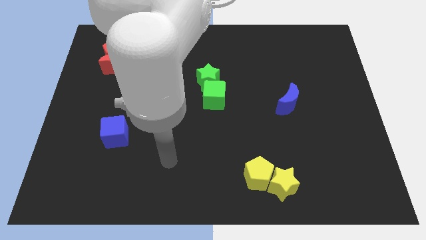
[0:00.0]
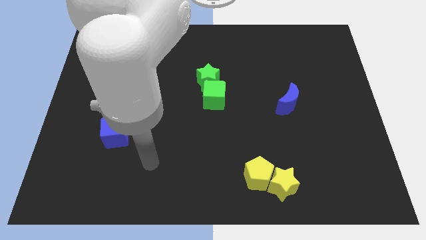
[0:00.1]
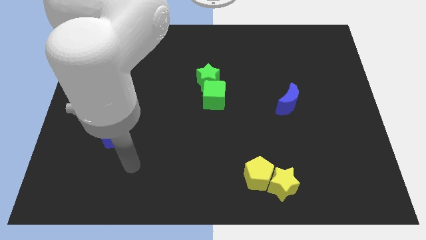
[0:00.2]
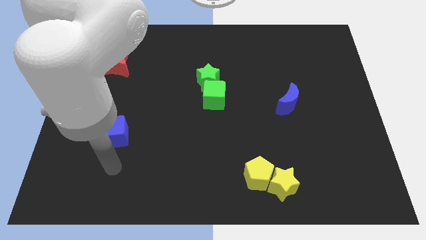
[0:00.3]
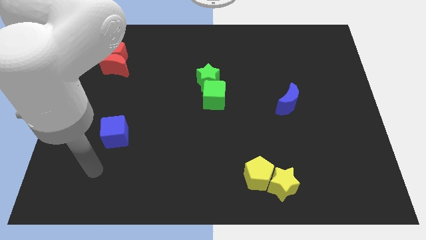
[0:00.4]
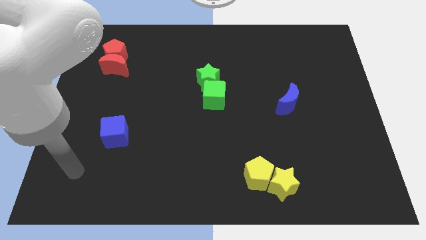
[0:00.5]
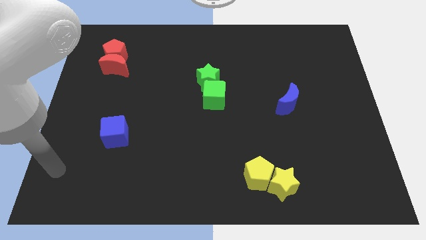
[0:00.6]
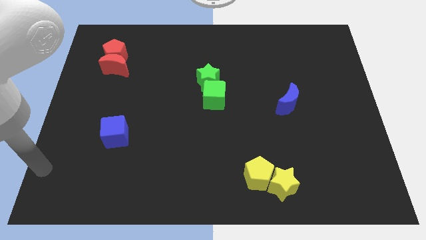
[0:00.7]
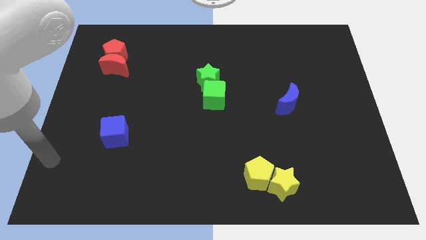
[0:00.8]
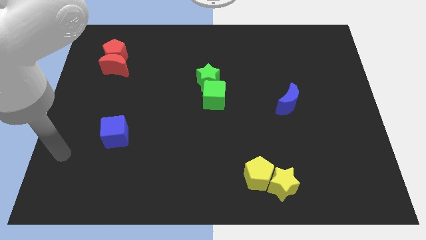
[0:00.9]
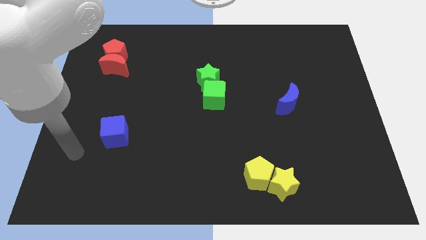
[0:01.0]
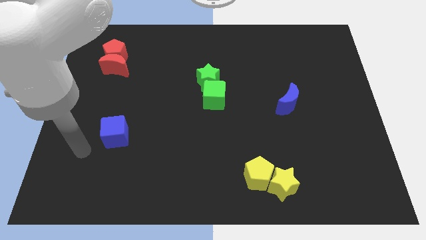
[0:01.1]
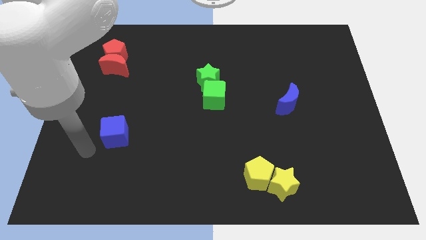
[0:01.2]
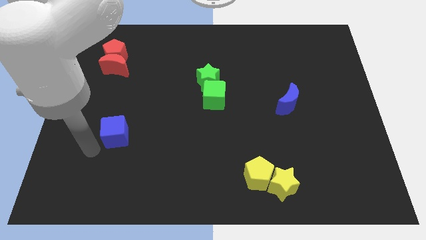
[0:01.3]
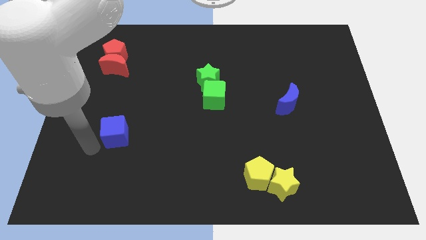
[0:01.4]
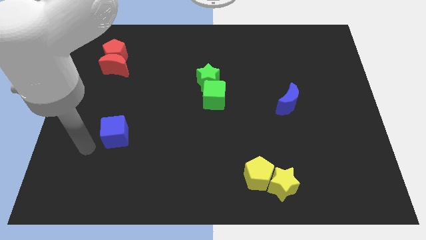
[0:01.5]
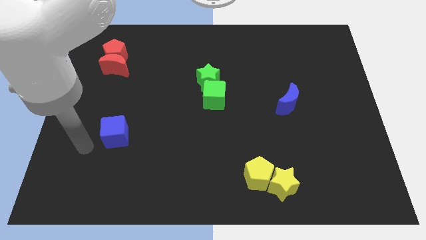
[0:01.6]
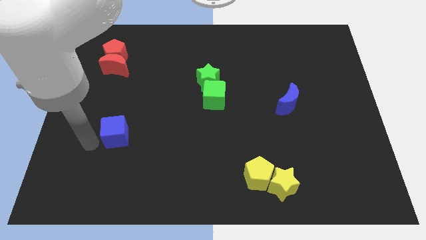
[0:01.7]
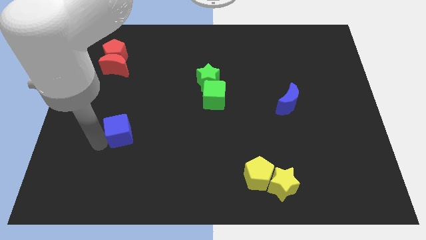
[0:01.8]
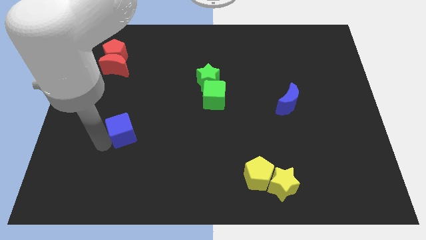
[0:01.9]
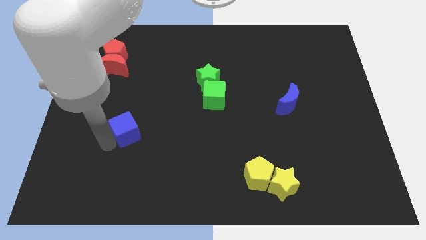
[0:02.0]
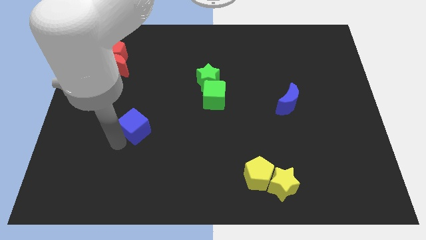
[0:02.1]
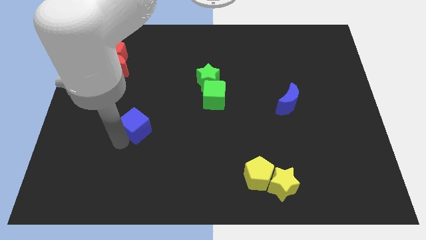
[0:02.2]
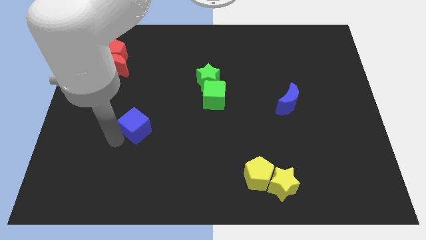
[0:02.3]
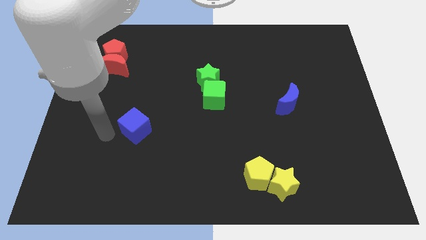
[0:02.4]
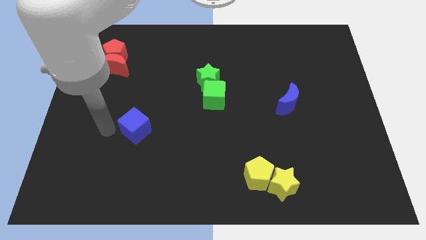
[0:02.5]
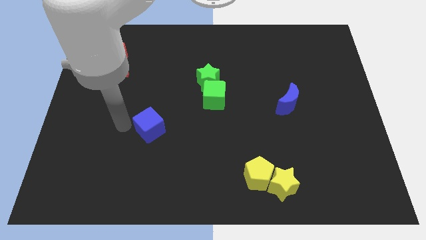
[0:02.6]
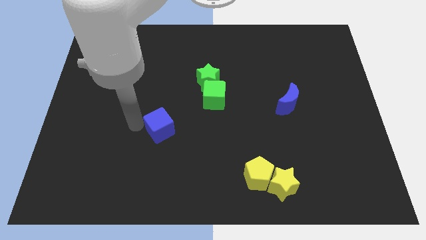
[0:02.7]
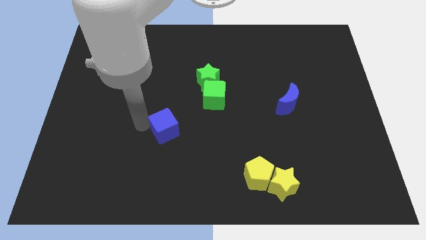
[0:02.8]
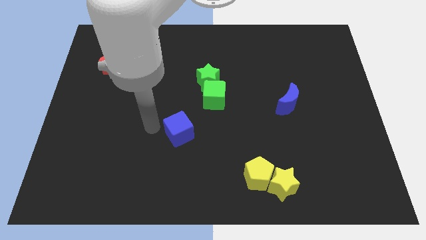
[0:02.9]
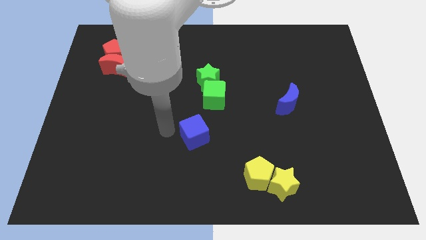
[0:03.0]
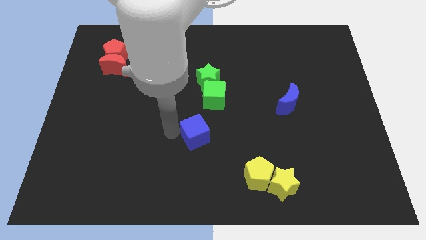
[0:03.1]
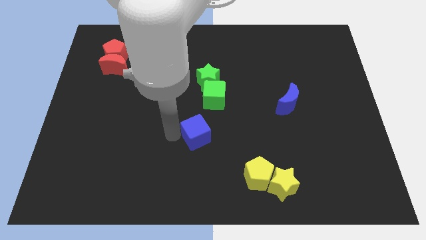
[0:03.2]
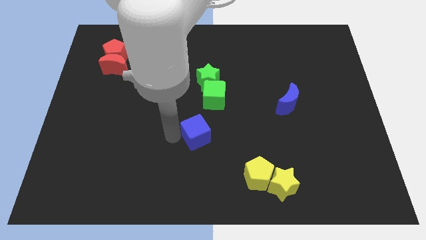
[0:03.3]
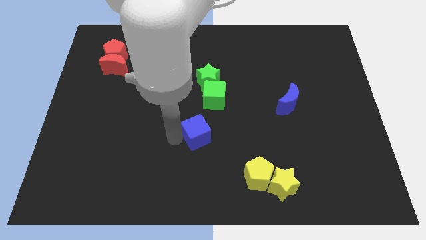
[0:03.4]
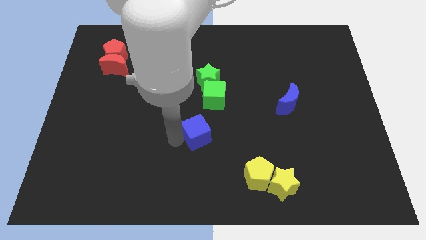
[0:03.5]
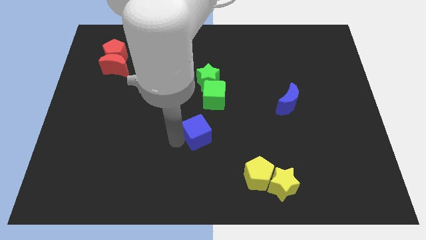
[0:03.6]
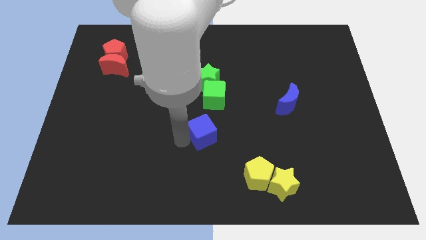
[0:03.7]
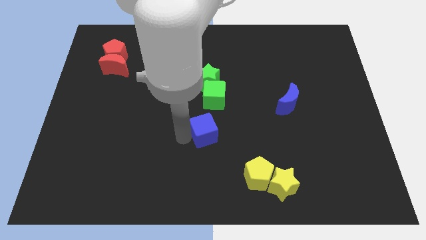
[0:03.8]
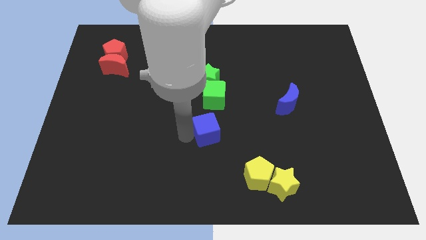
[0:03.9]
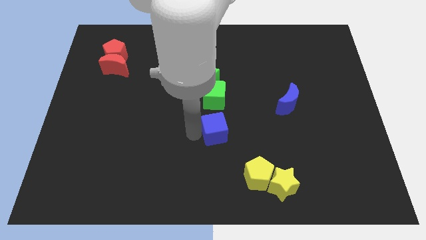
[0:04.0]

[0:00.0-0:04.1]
place blue cube to the bottom of green cube

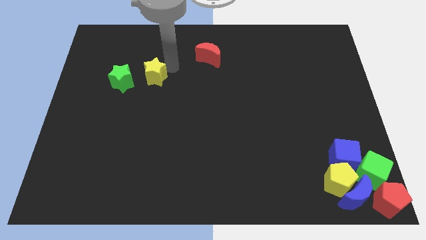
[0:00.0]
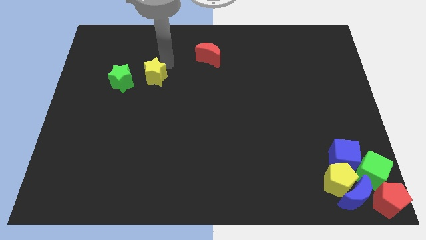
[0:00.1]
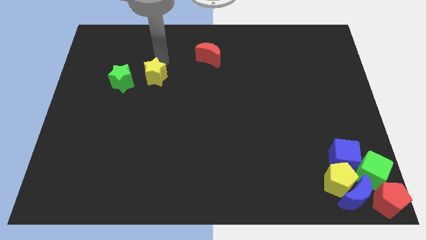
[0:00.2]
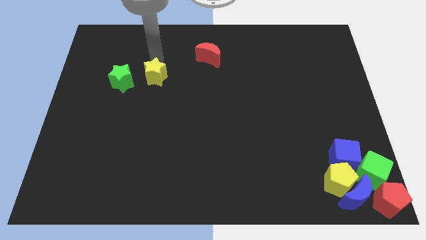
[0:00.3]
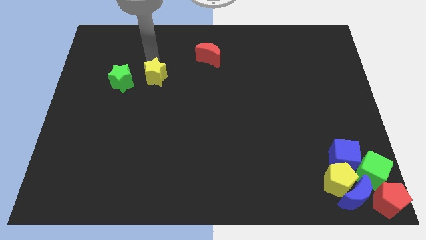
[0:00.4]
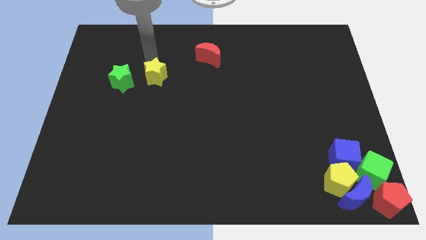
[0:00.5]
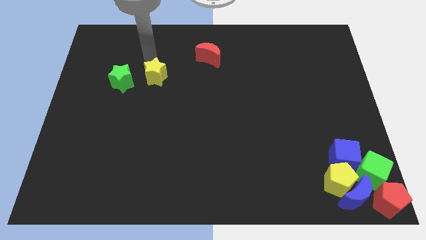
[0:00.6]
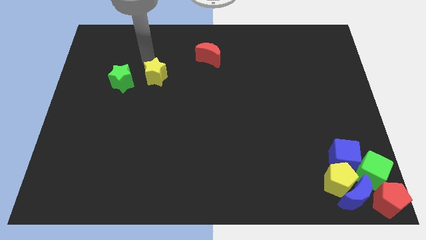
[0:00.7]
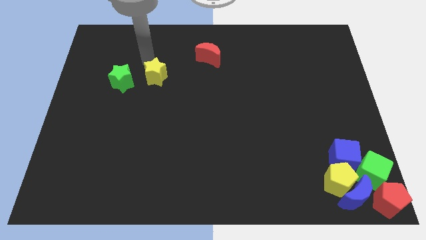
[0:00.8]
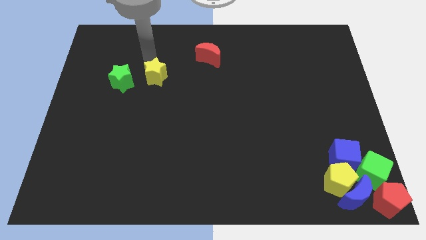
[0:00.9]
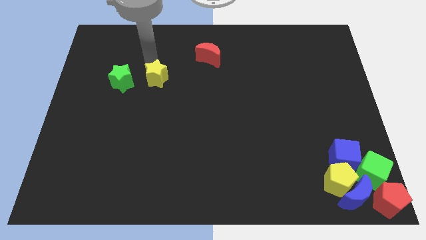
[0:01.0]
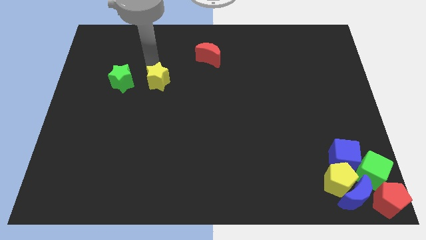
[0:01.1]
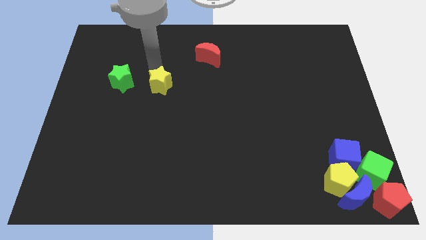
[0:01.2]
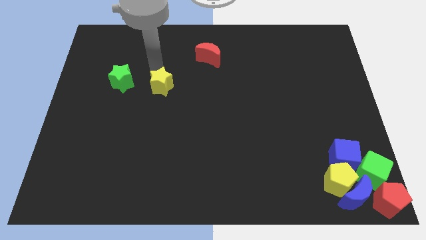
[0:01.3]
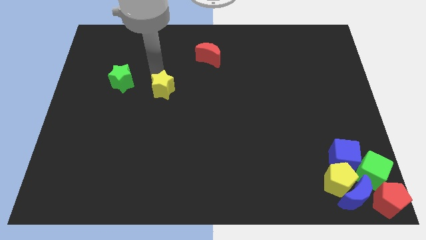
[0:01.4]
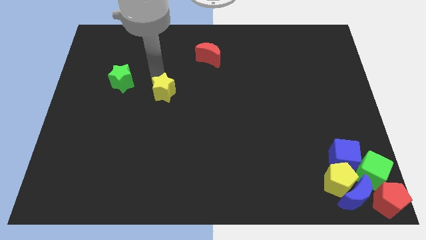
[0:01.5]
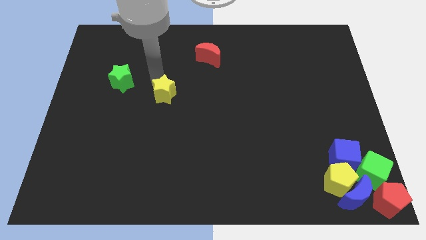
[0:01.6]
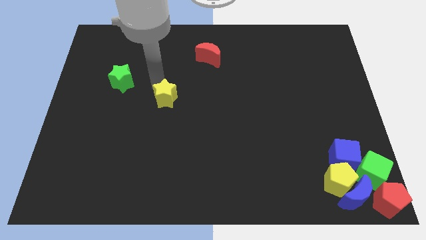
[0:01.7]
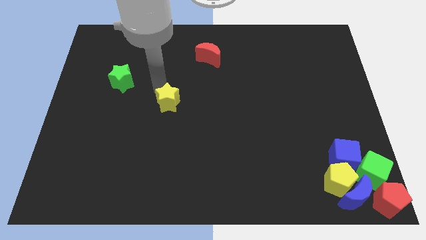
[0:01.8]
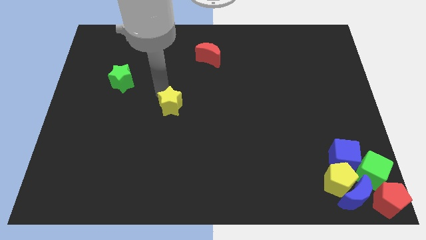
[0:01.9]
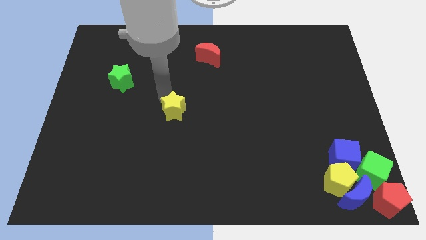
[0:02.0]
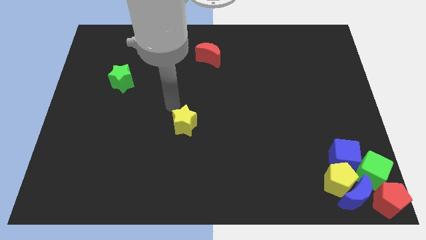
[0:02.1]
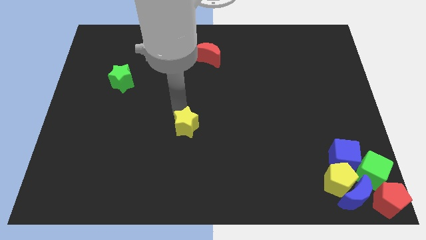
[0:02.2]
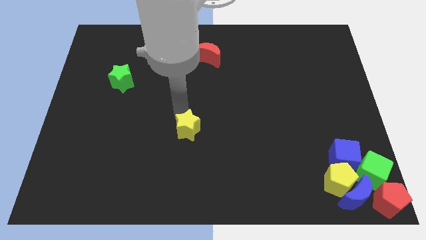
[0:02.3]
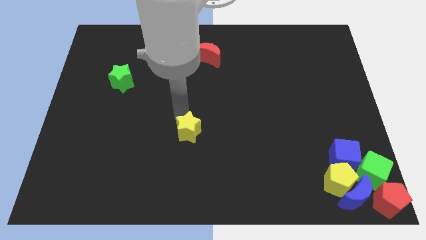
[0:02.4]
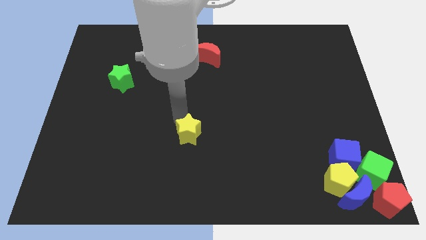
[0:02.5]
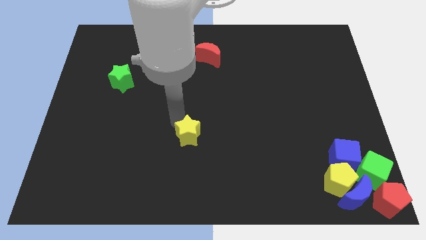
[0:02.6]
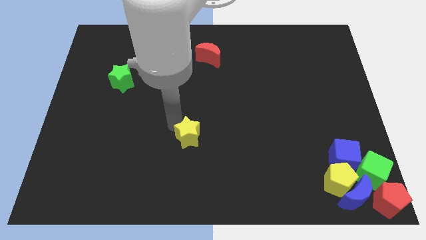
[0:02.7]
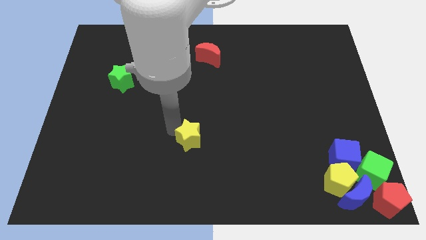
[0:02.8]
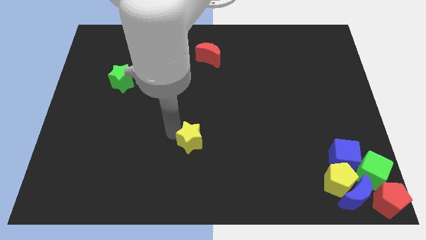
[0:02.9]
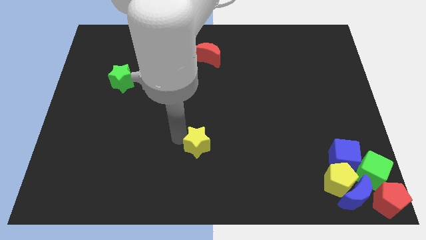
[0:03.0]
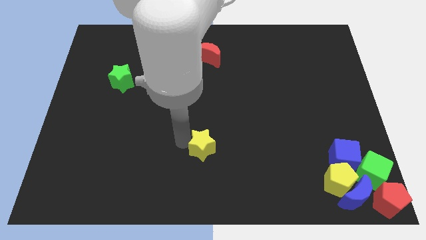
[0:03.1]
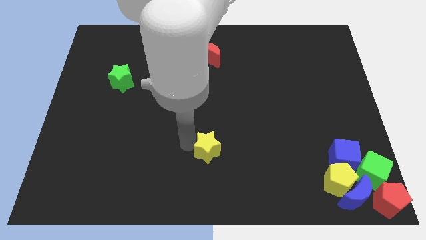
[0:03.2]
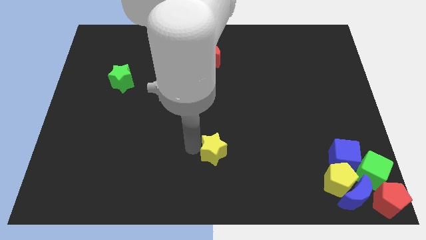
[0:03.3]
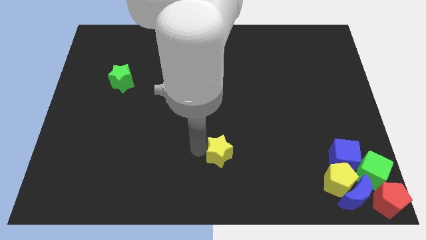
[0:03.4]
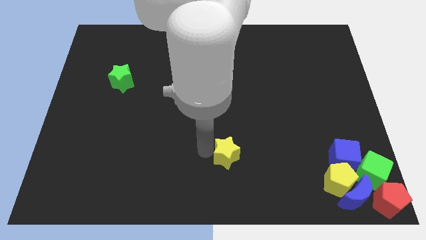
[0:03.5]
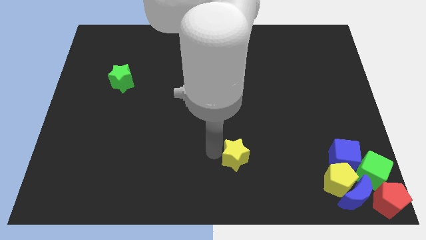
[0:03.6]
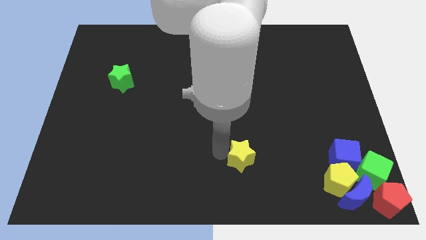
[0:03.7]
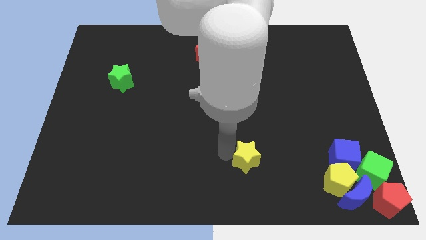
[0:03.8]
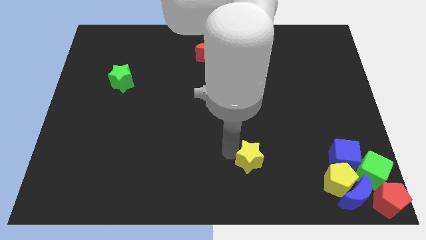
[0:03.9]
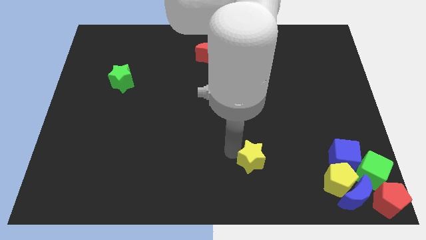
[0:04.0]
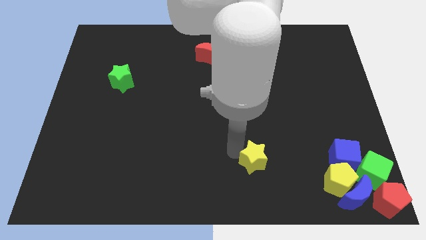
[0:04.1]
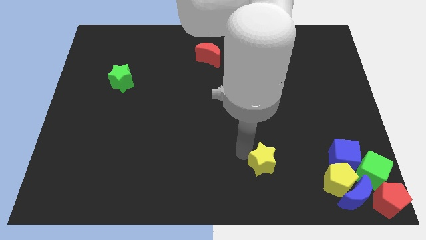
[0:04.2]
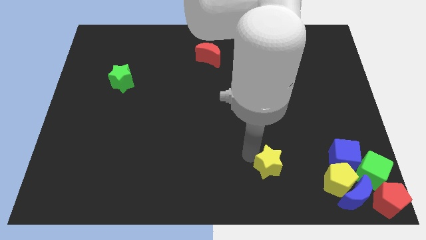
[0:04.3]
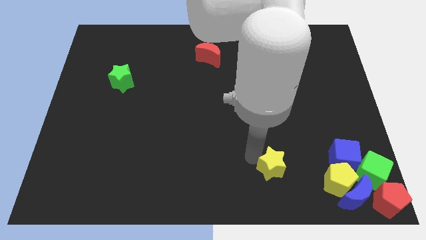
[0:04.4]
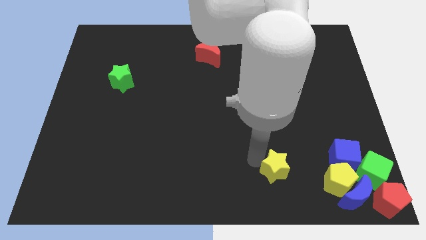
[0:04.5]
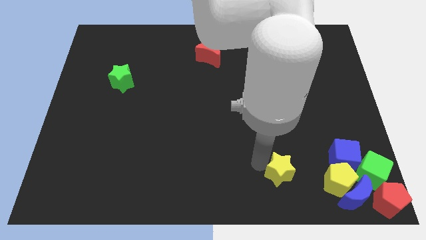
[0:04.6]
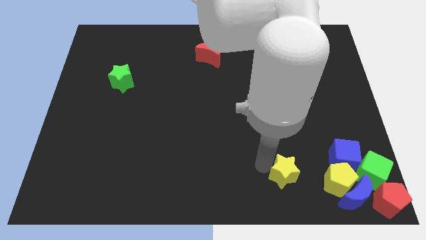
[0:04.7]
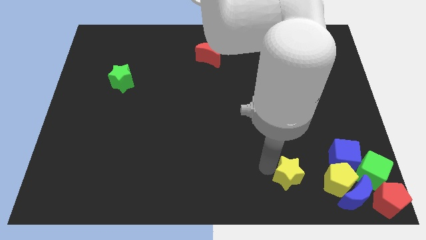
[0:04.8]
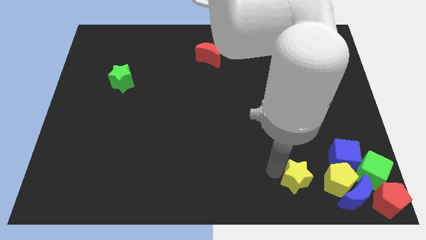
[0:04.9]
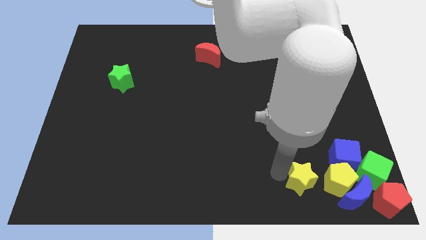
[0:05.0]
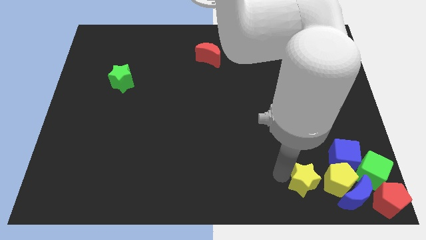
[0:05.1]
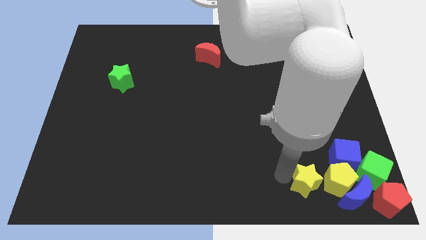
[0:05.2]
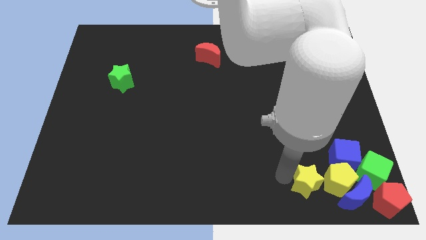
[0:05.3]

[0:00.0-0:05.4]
move the yellow star to the left of the yellow pentagon
